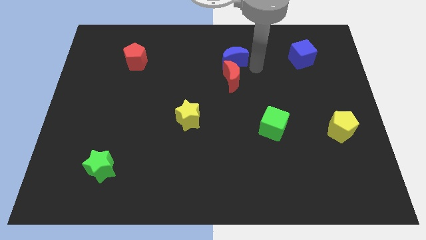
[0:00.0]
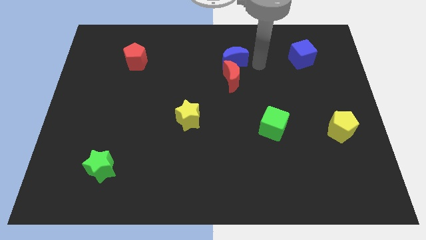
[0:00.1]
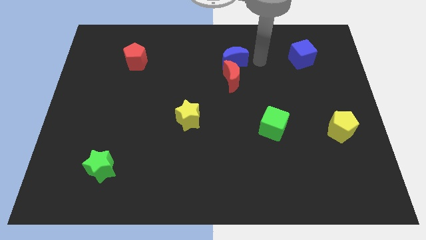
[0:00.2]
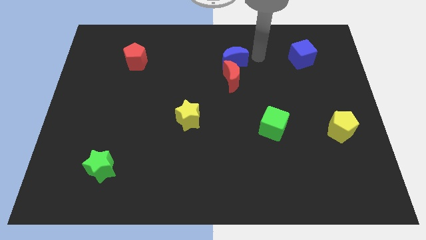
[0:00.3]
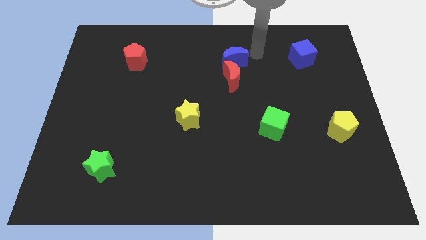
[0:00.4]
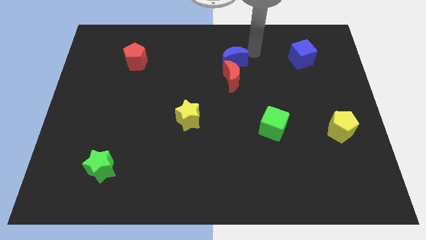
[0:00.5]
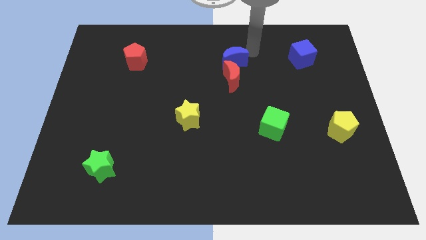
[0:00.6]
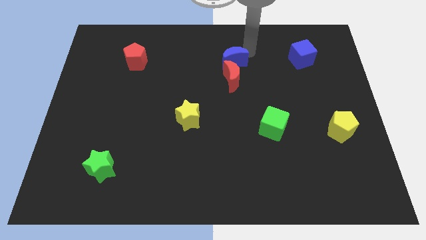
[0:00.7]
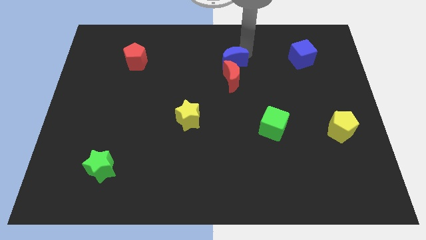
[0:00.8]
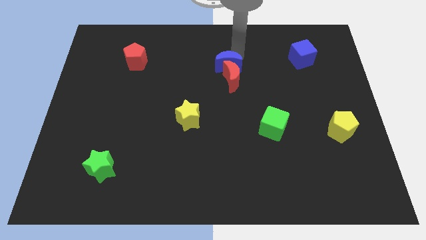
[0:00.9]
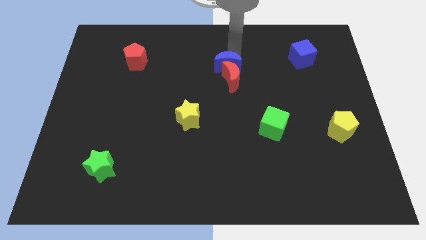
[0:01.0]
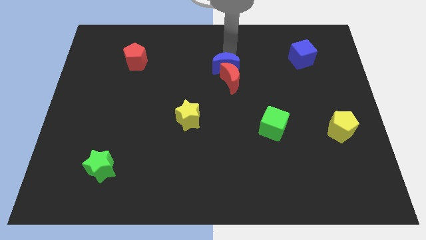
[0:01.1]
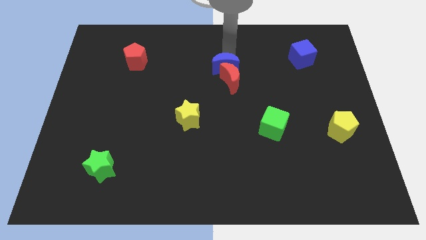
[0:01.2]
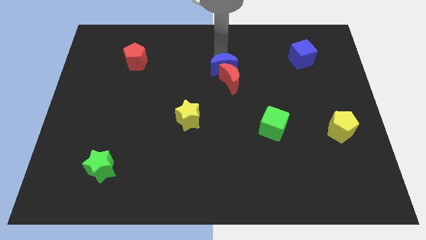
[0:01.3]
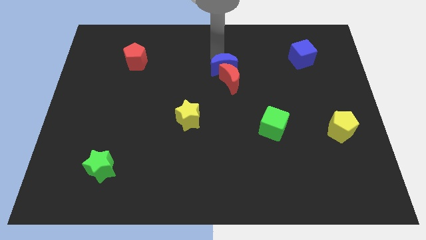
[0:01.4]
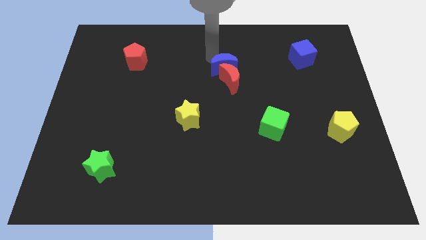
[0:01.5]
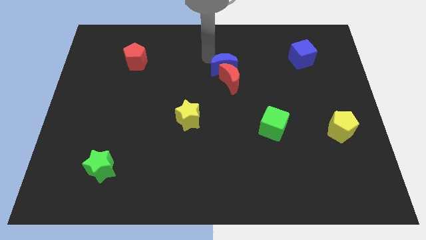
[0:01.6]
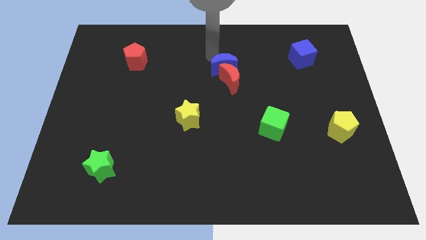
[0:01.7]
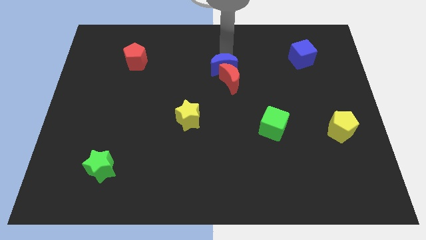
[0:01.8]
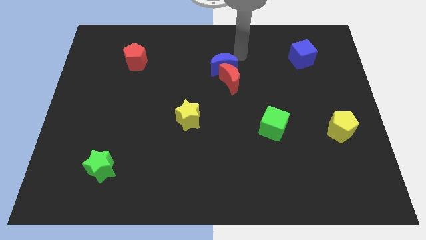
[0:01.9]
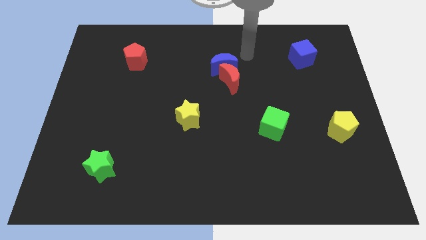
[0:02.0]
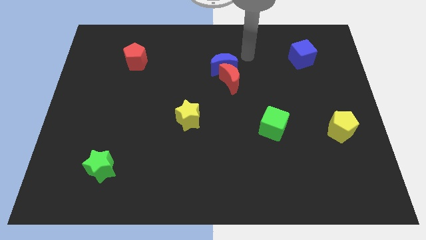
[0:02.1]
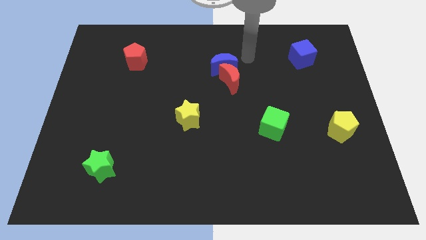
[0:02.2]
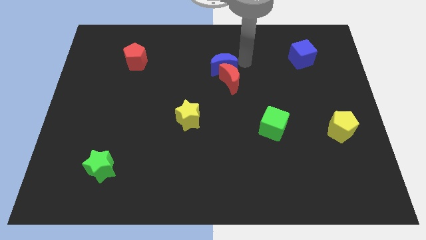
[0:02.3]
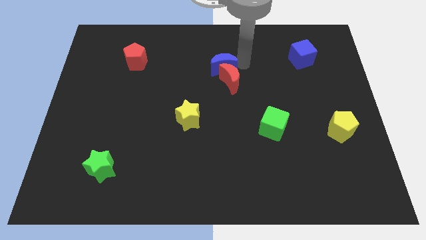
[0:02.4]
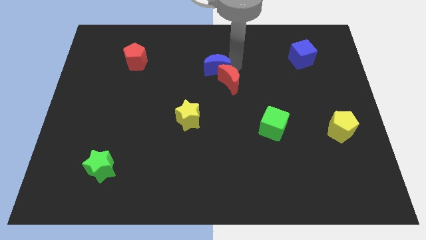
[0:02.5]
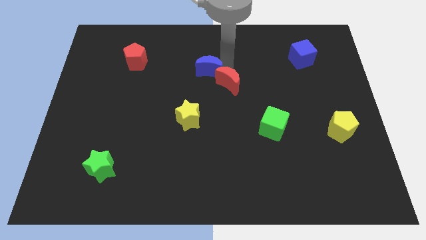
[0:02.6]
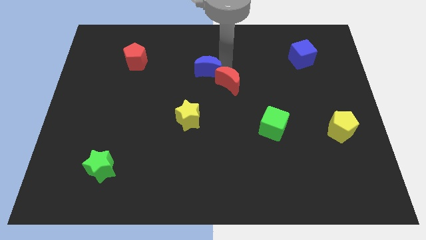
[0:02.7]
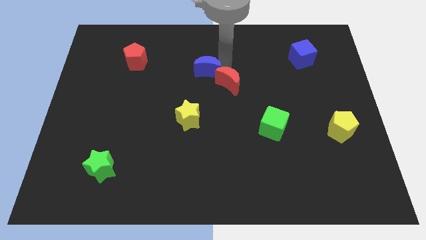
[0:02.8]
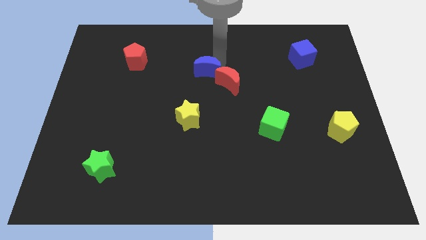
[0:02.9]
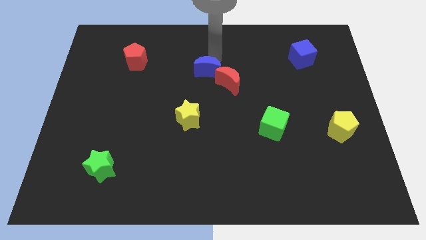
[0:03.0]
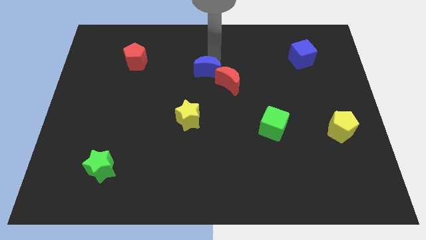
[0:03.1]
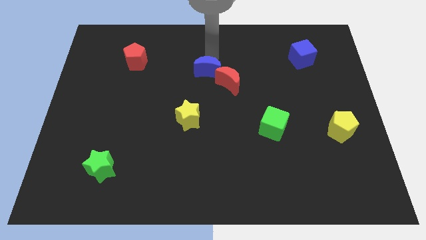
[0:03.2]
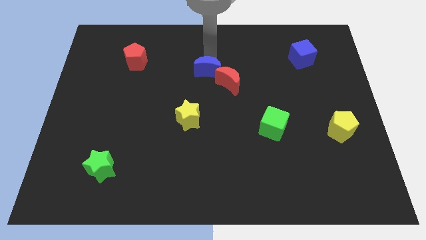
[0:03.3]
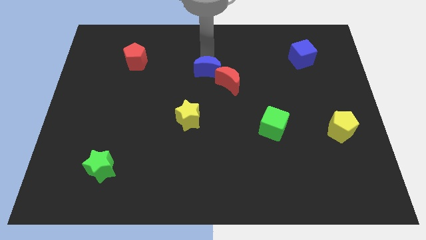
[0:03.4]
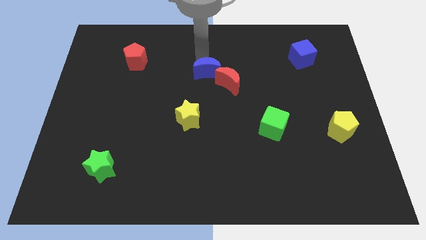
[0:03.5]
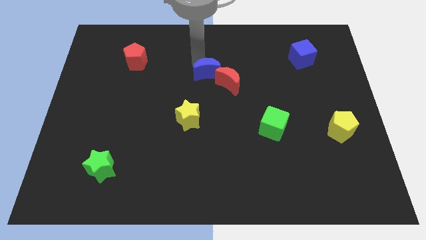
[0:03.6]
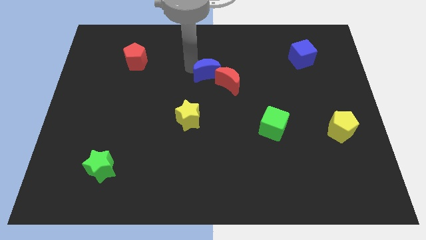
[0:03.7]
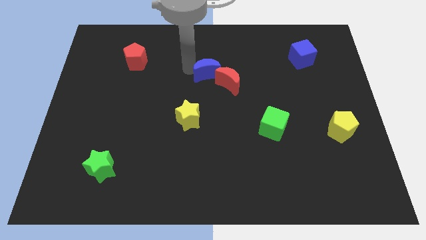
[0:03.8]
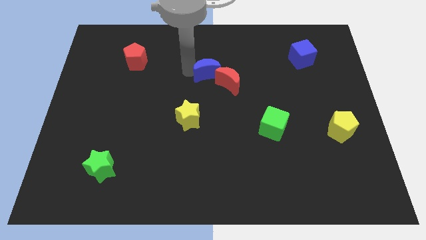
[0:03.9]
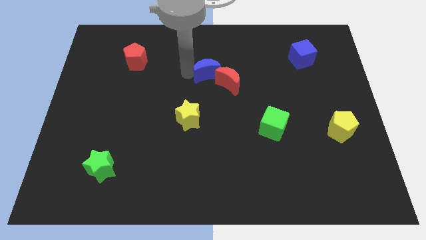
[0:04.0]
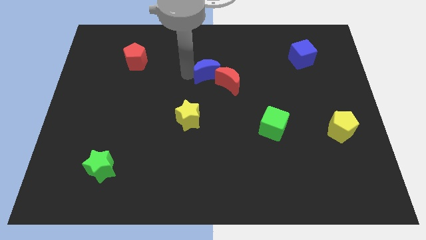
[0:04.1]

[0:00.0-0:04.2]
push the blue moon and red moon together at the top side of the yellow star

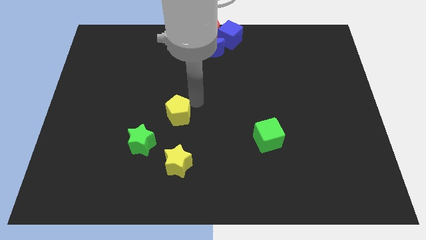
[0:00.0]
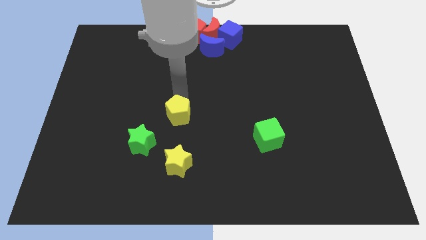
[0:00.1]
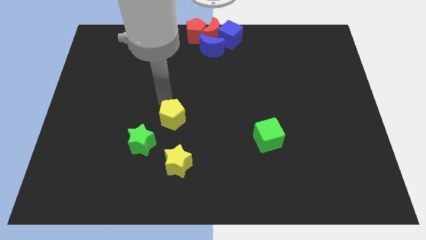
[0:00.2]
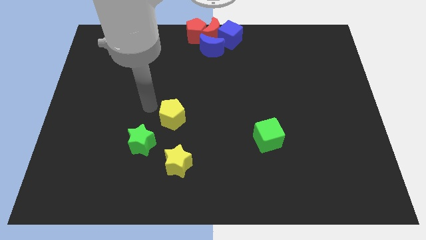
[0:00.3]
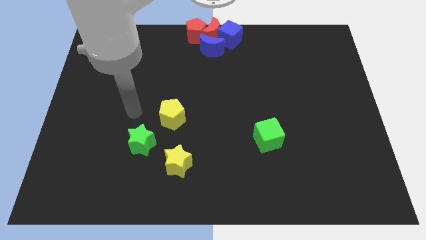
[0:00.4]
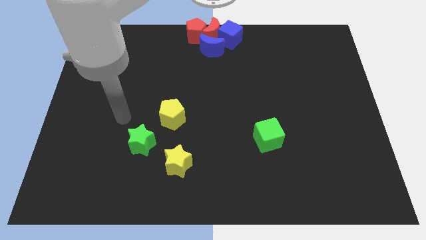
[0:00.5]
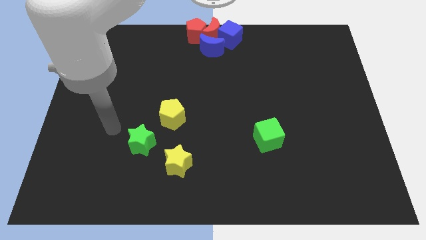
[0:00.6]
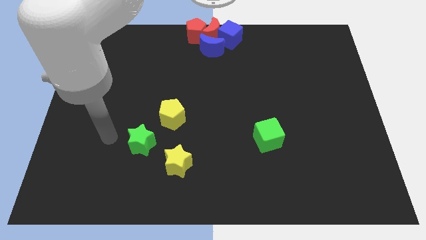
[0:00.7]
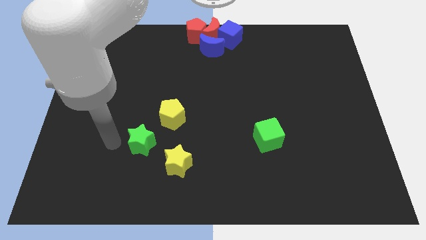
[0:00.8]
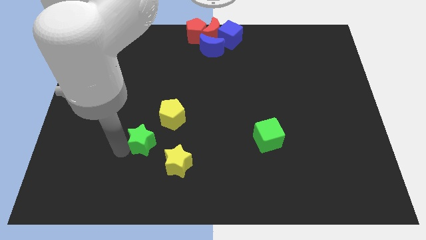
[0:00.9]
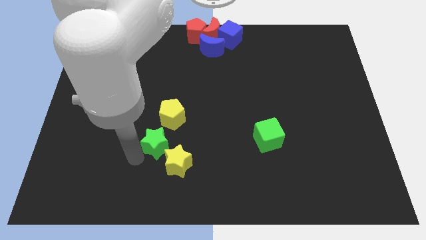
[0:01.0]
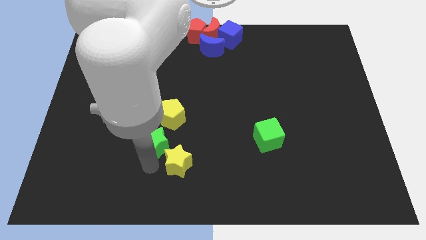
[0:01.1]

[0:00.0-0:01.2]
push the green star close to the yellow star

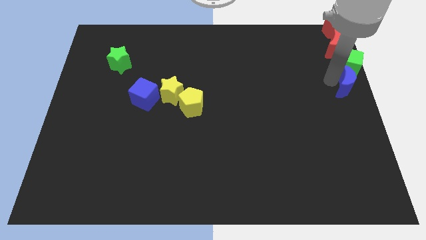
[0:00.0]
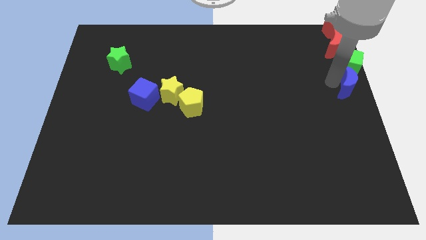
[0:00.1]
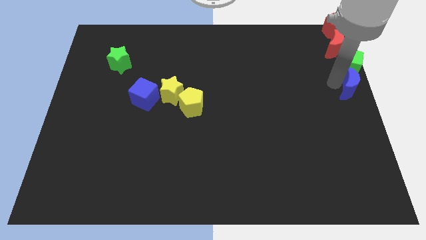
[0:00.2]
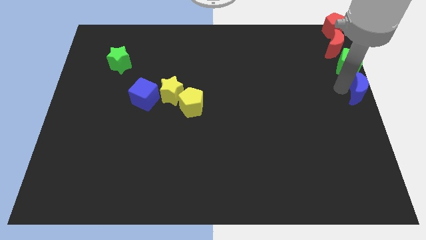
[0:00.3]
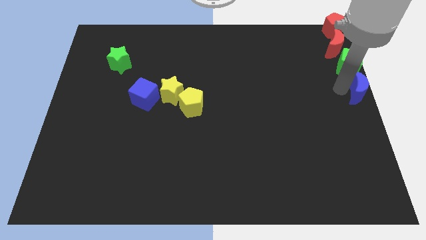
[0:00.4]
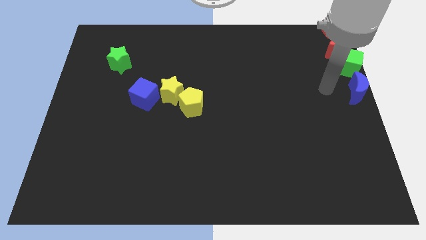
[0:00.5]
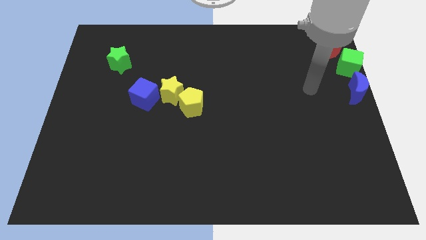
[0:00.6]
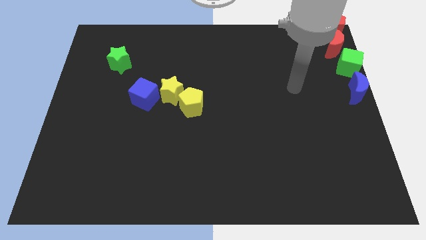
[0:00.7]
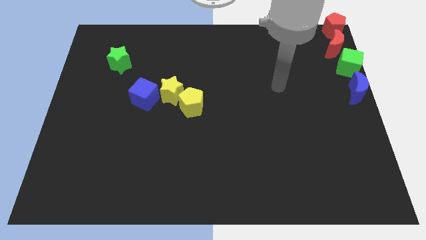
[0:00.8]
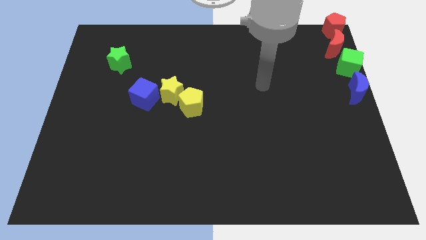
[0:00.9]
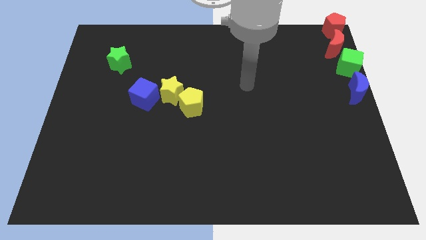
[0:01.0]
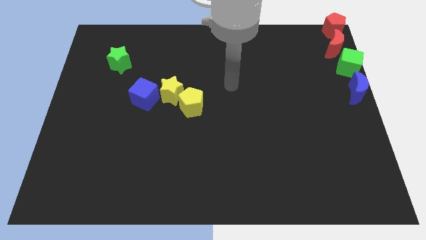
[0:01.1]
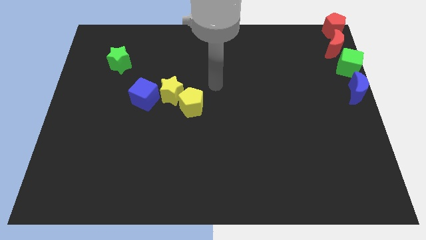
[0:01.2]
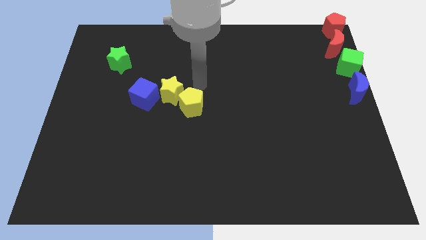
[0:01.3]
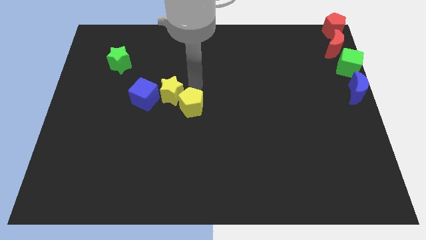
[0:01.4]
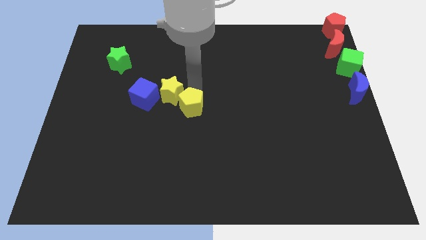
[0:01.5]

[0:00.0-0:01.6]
move the arm above the yellow pentagon

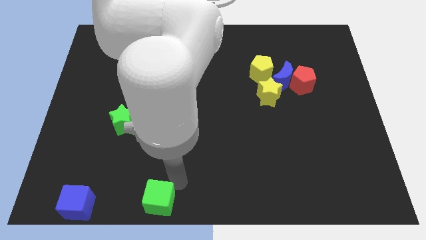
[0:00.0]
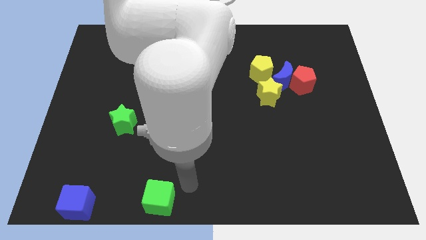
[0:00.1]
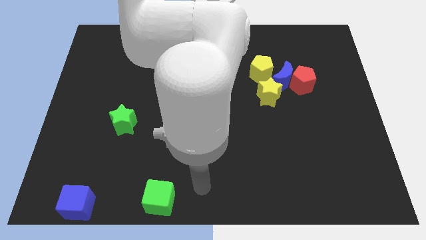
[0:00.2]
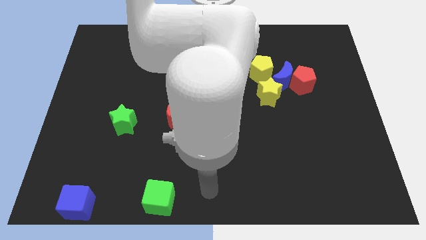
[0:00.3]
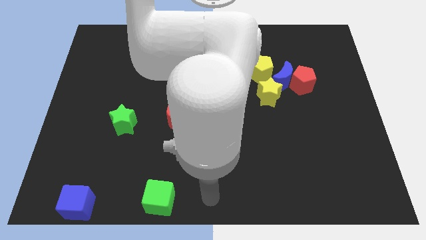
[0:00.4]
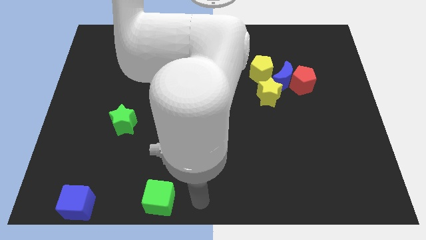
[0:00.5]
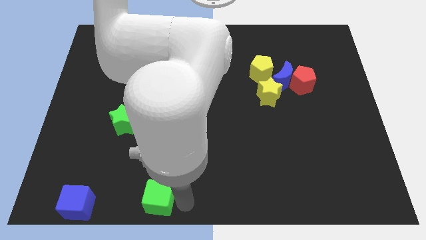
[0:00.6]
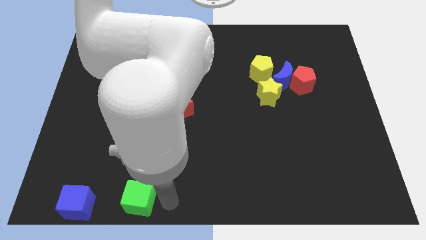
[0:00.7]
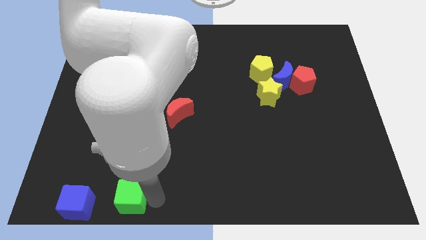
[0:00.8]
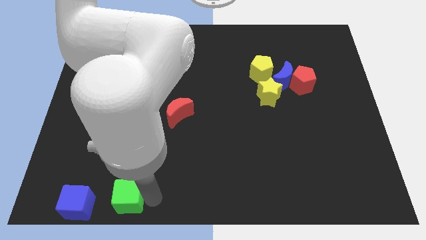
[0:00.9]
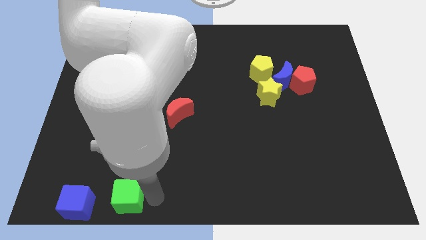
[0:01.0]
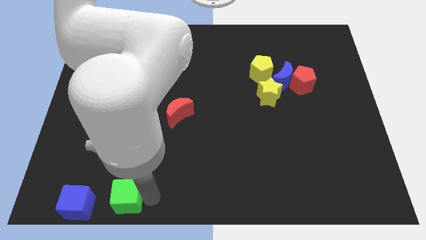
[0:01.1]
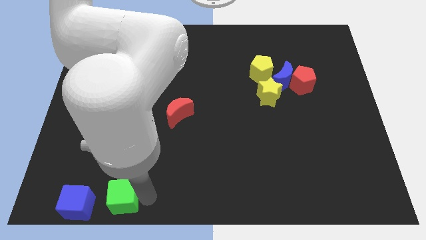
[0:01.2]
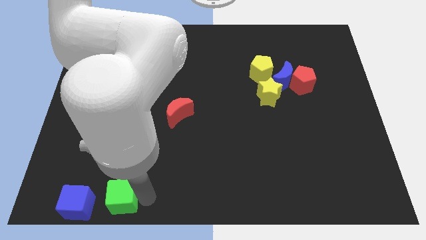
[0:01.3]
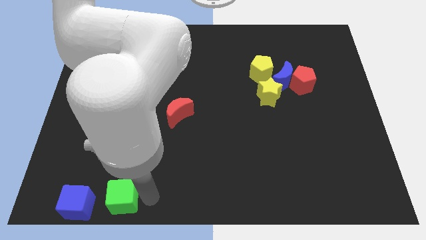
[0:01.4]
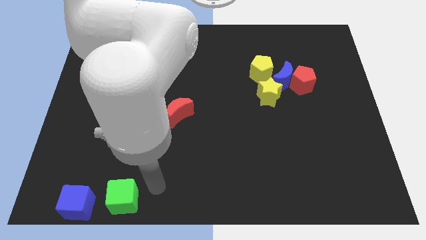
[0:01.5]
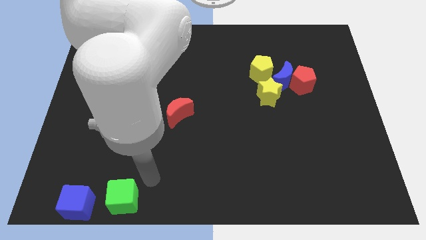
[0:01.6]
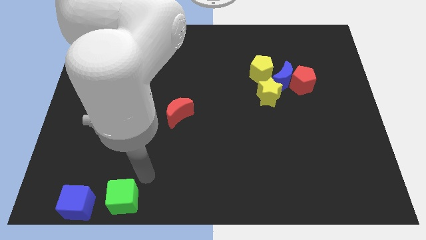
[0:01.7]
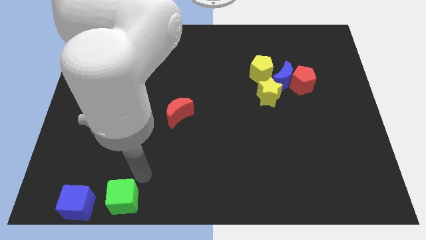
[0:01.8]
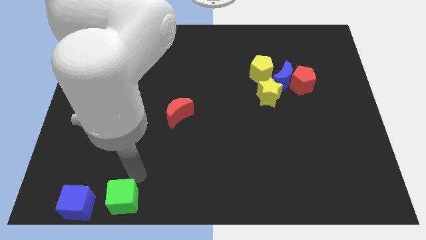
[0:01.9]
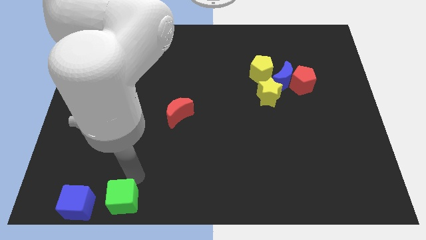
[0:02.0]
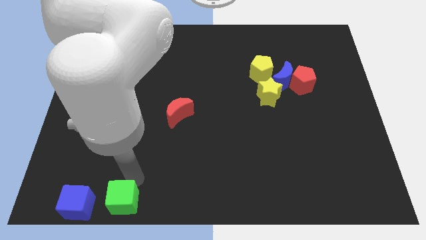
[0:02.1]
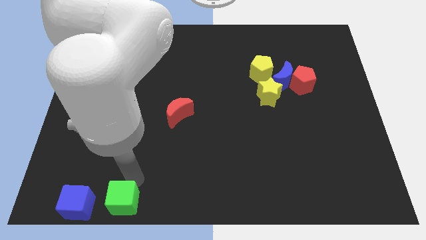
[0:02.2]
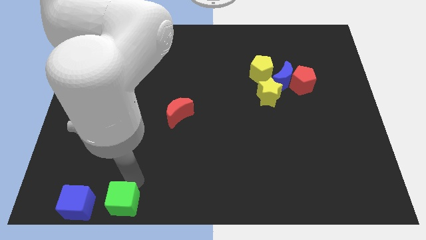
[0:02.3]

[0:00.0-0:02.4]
push the green cube to the right of the blue cube
